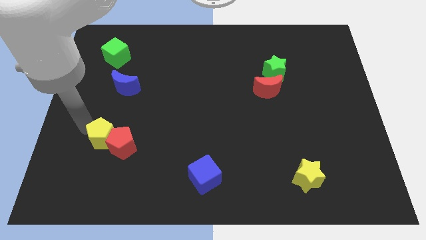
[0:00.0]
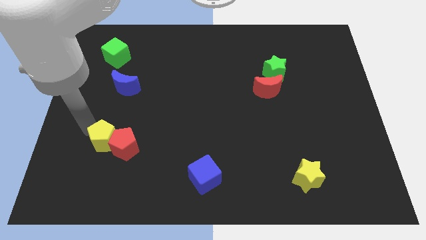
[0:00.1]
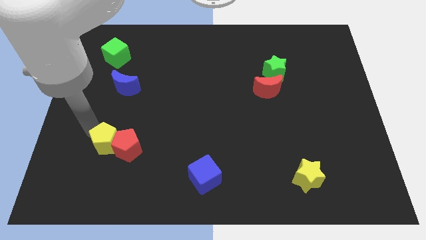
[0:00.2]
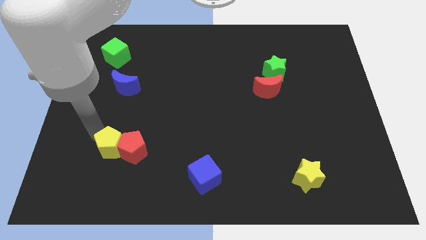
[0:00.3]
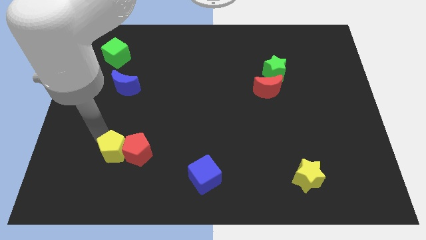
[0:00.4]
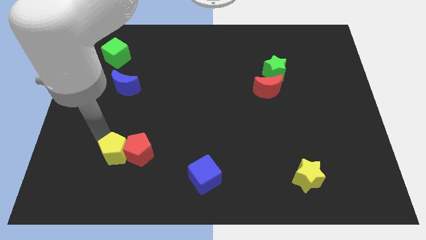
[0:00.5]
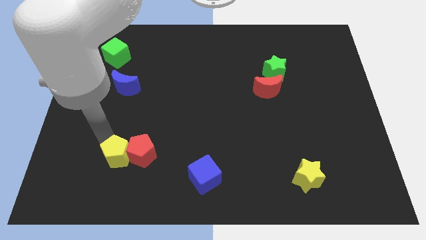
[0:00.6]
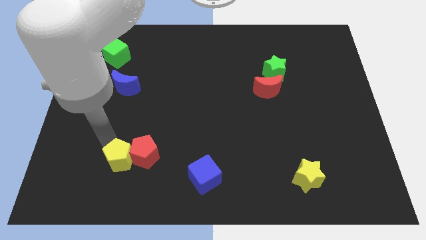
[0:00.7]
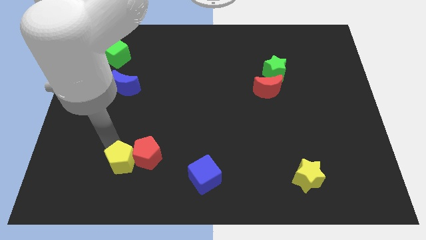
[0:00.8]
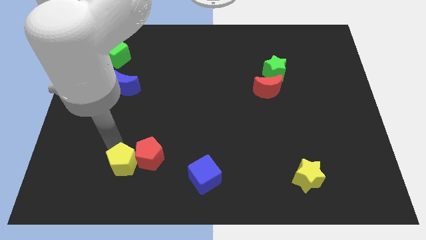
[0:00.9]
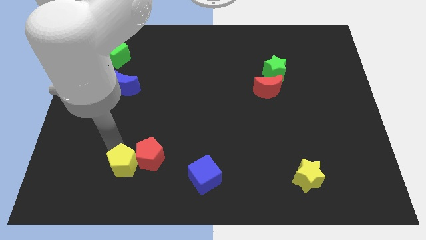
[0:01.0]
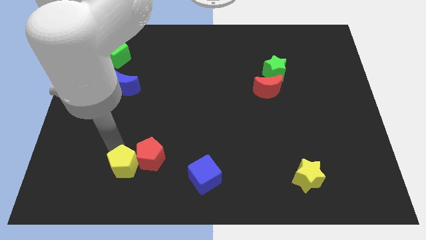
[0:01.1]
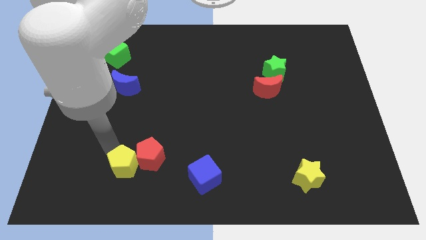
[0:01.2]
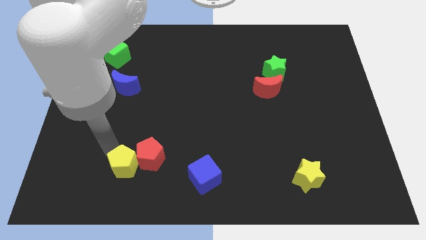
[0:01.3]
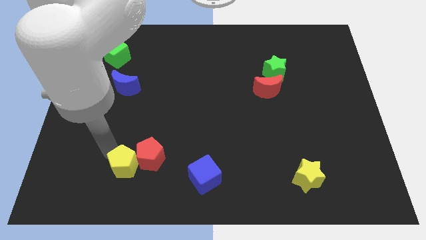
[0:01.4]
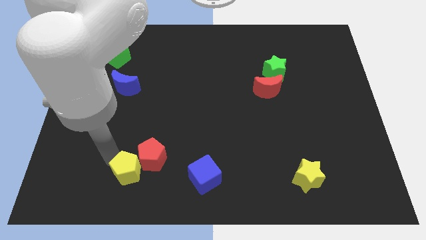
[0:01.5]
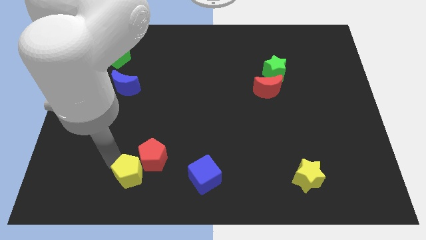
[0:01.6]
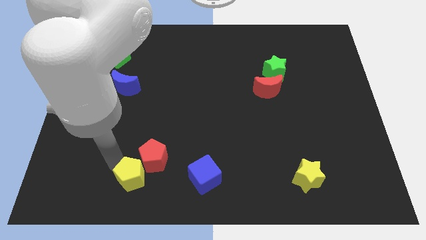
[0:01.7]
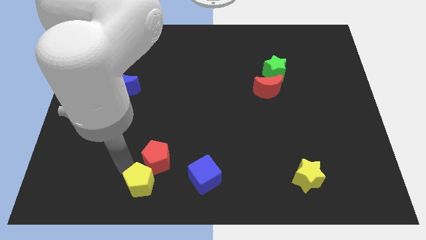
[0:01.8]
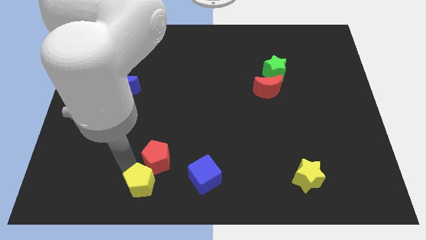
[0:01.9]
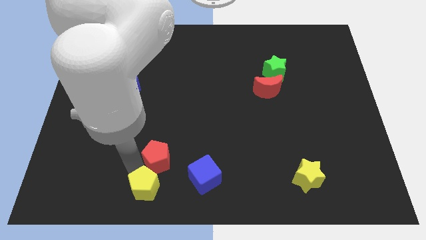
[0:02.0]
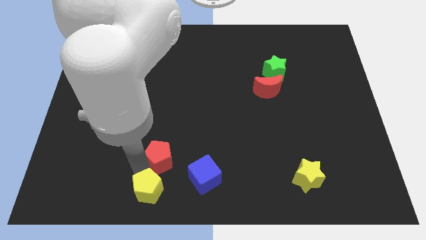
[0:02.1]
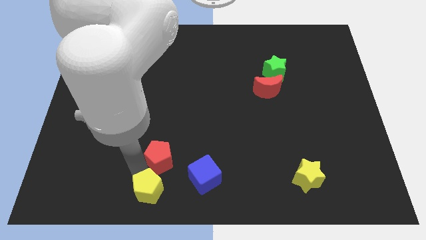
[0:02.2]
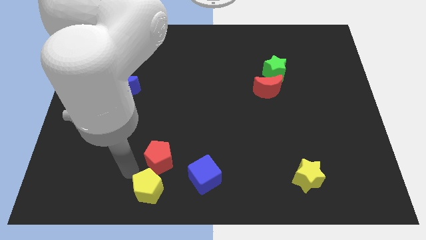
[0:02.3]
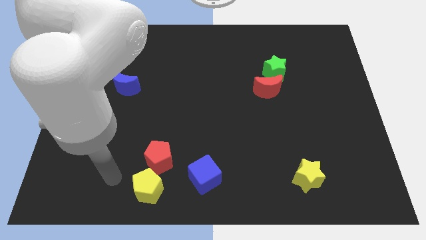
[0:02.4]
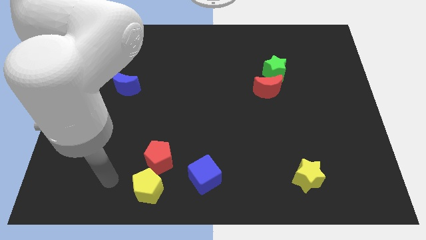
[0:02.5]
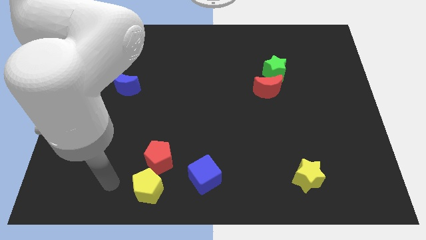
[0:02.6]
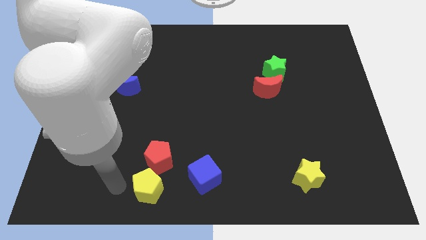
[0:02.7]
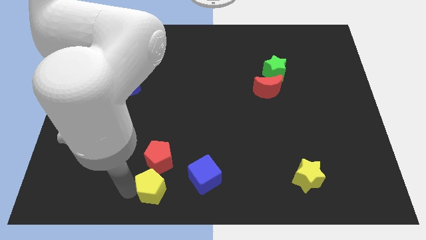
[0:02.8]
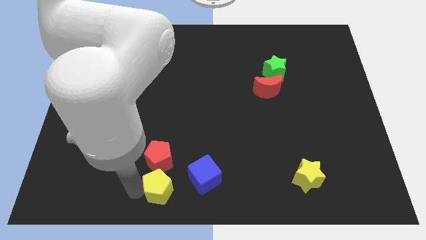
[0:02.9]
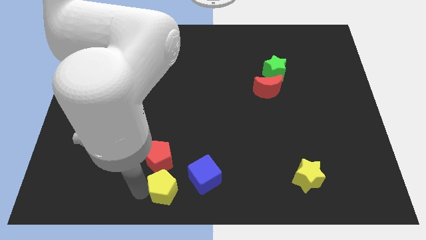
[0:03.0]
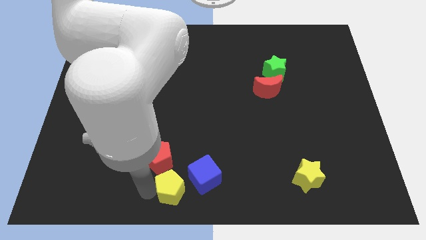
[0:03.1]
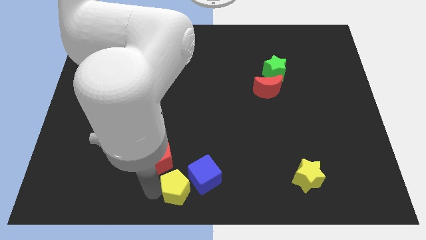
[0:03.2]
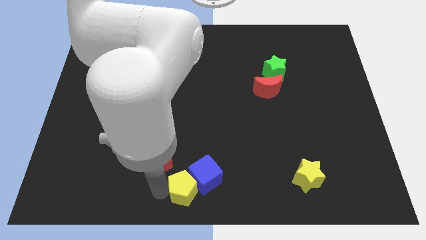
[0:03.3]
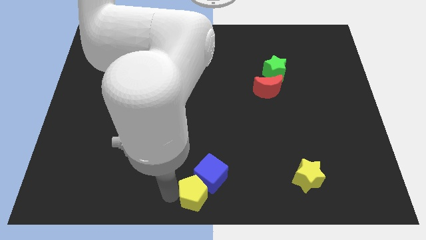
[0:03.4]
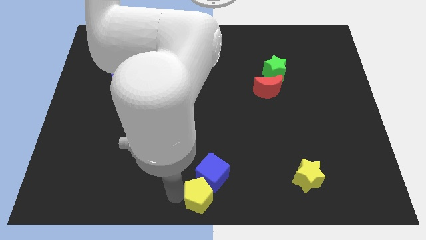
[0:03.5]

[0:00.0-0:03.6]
place yellow pentagon below blue cube

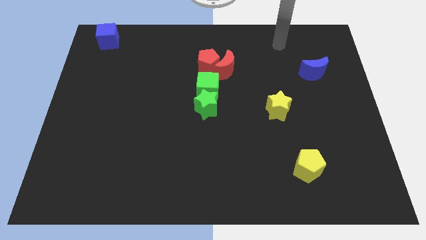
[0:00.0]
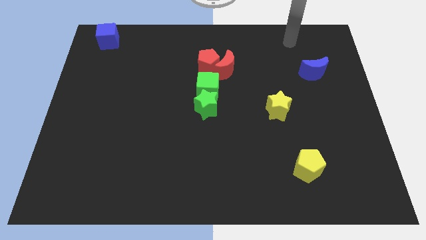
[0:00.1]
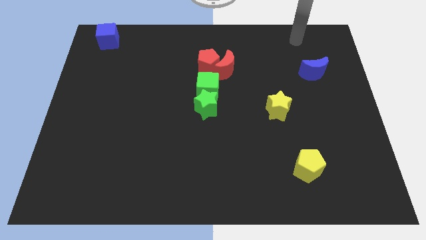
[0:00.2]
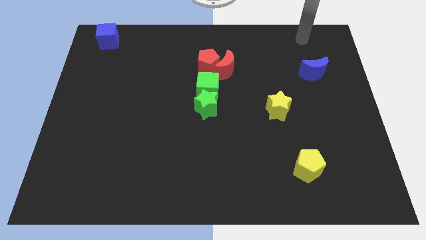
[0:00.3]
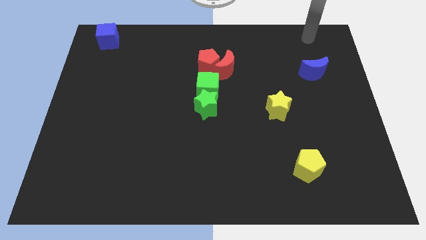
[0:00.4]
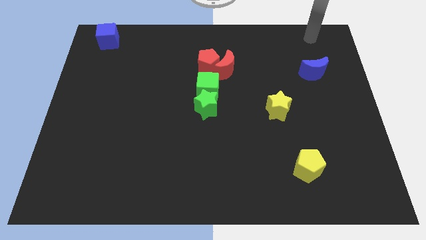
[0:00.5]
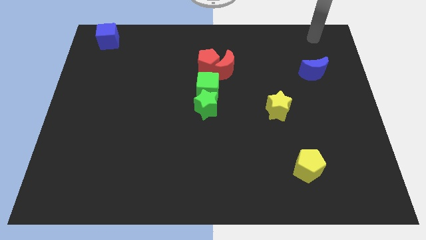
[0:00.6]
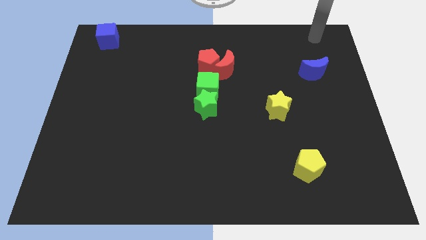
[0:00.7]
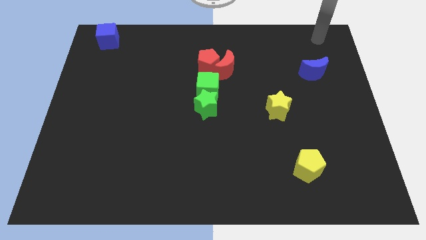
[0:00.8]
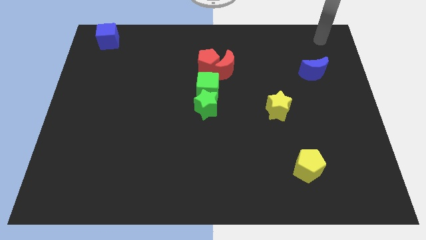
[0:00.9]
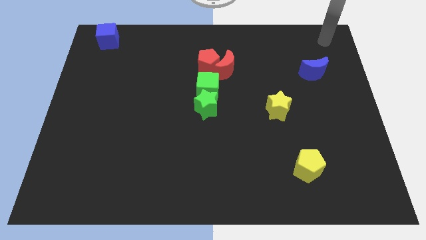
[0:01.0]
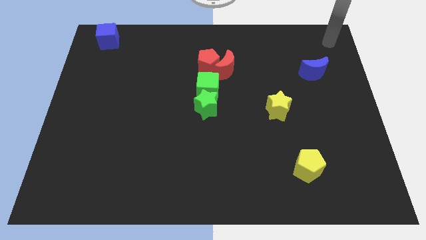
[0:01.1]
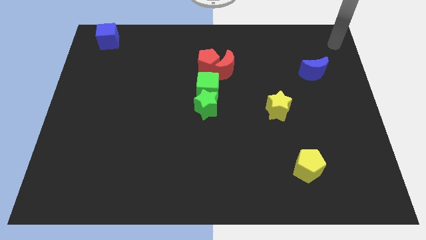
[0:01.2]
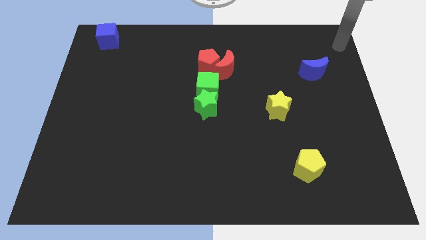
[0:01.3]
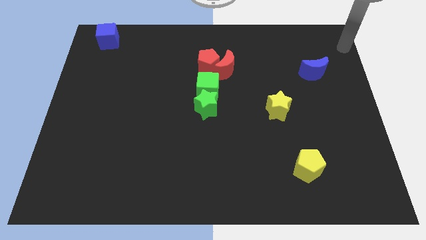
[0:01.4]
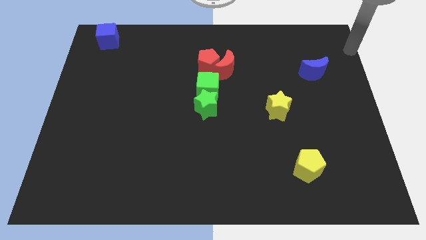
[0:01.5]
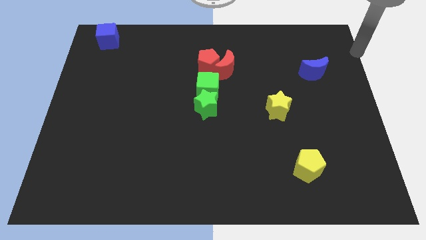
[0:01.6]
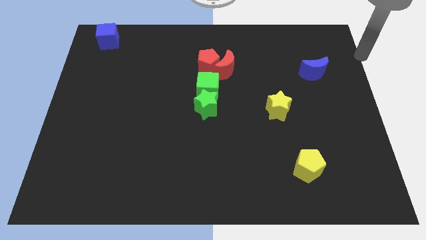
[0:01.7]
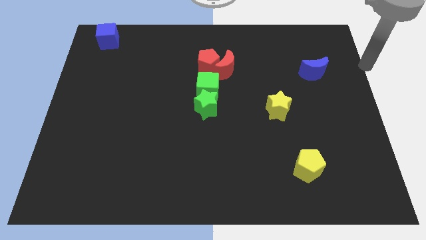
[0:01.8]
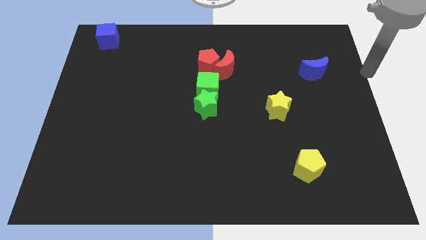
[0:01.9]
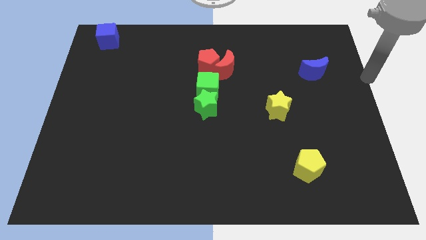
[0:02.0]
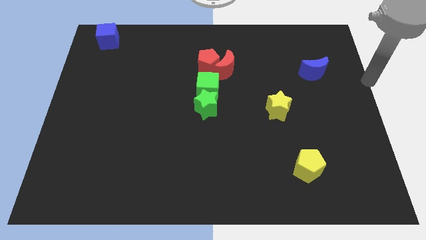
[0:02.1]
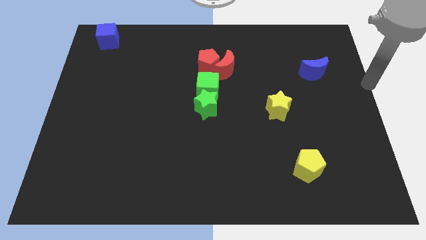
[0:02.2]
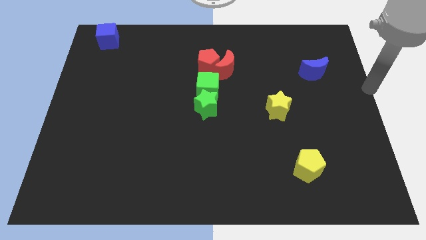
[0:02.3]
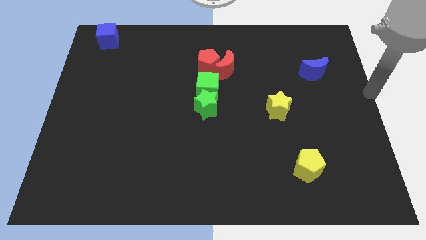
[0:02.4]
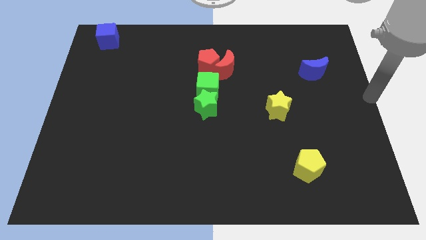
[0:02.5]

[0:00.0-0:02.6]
put your hand at the center right of the board

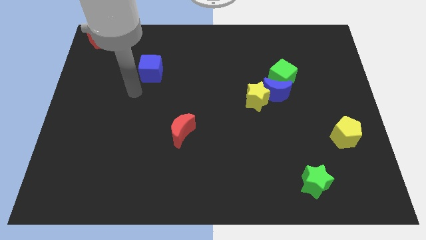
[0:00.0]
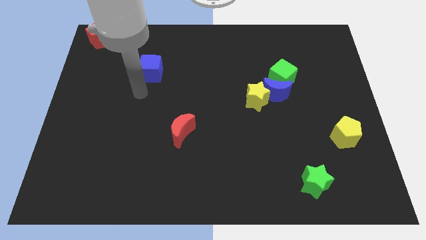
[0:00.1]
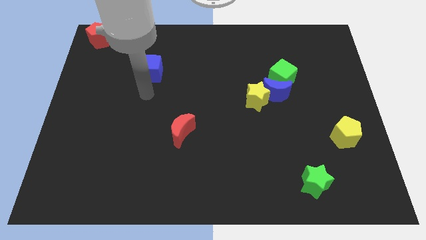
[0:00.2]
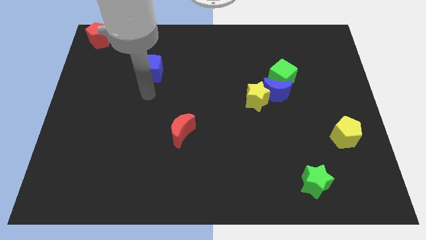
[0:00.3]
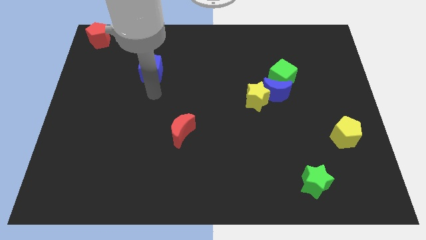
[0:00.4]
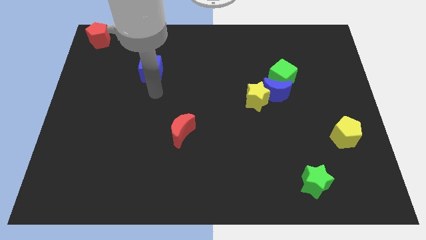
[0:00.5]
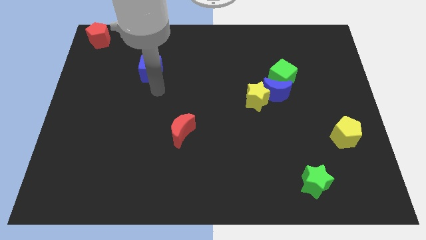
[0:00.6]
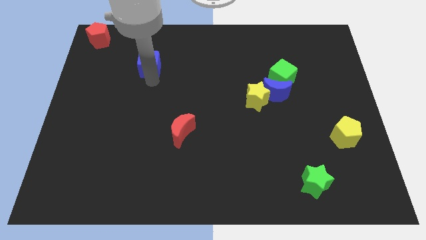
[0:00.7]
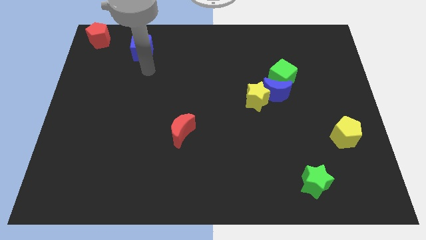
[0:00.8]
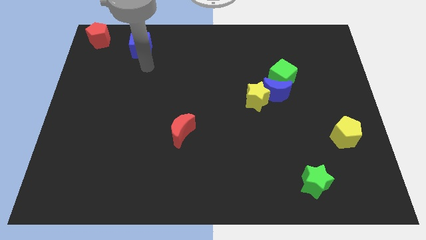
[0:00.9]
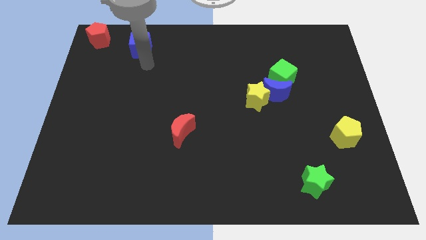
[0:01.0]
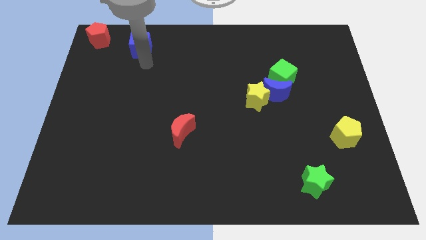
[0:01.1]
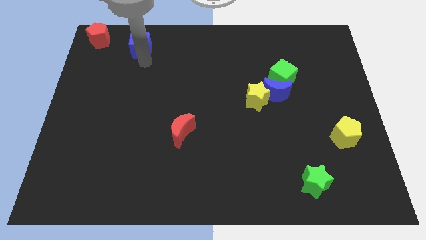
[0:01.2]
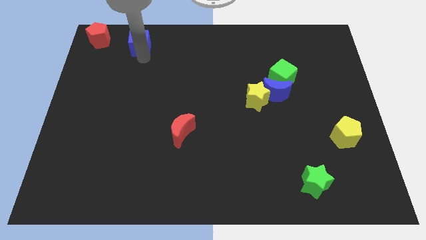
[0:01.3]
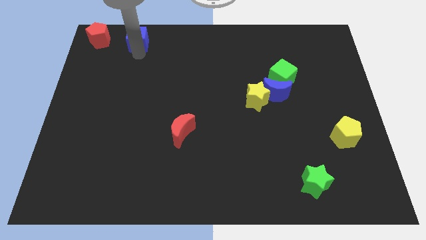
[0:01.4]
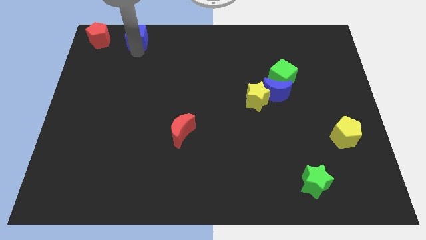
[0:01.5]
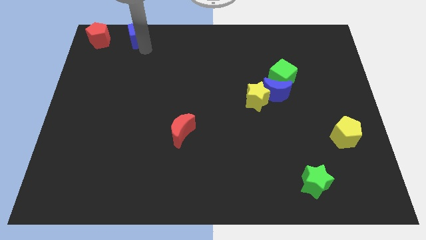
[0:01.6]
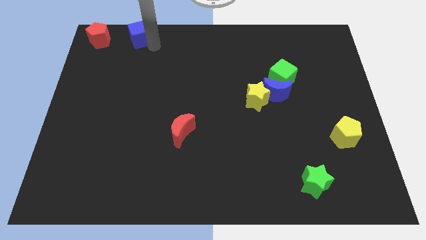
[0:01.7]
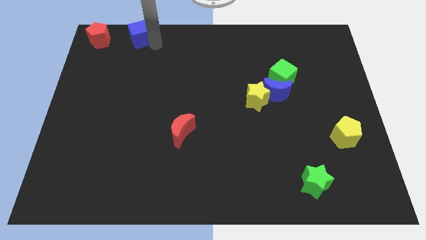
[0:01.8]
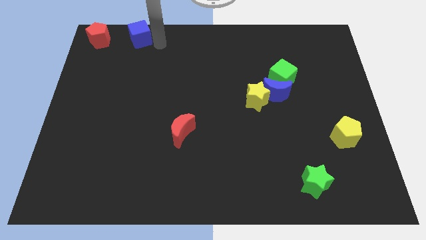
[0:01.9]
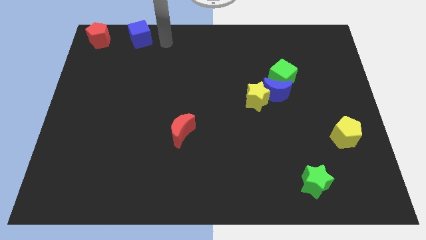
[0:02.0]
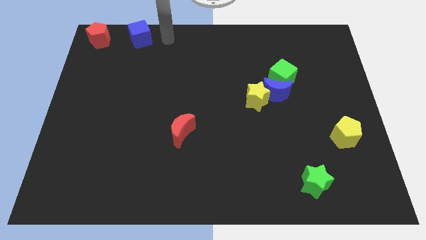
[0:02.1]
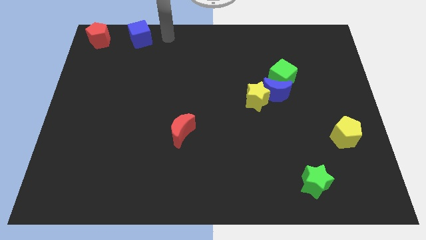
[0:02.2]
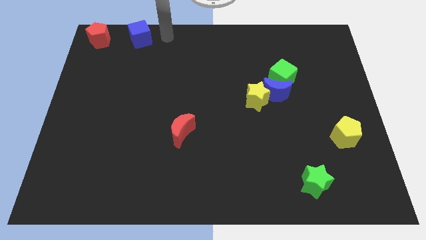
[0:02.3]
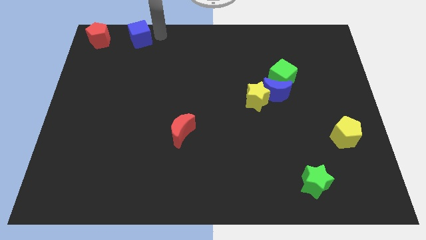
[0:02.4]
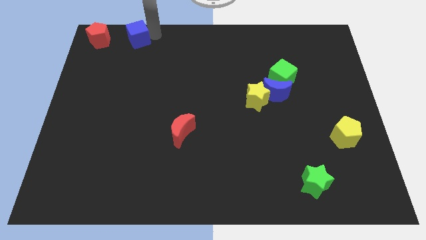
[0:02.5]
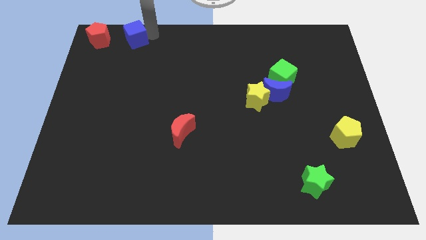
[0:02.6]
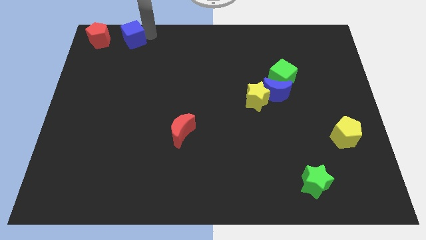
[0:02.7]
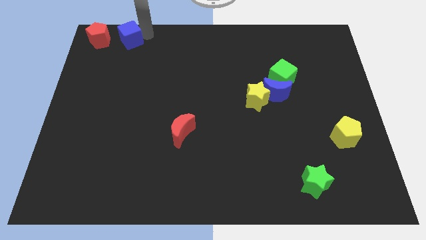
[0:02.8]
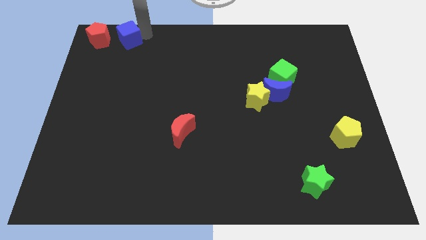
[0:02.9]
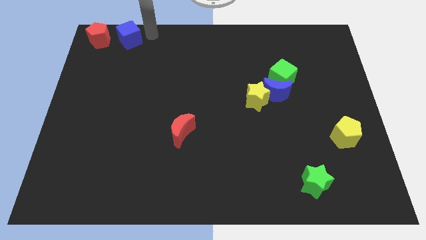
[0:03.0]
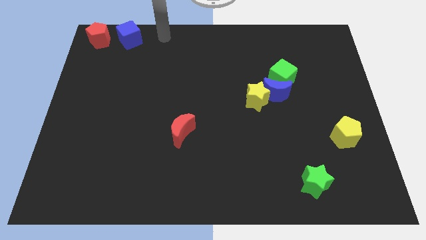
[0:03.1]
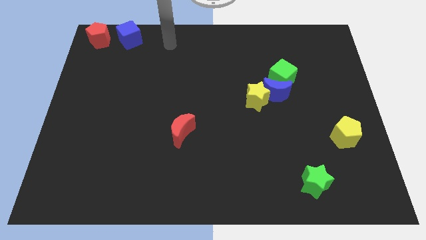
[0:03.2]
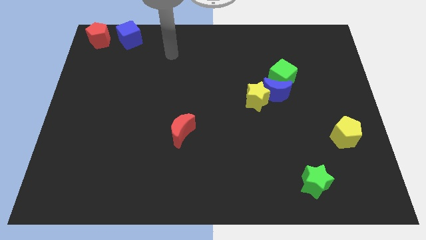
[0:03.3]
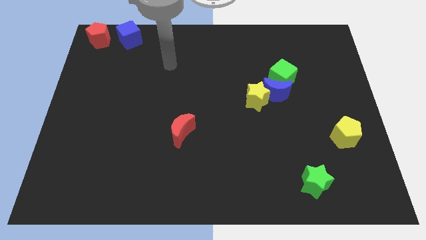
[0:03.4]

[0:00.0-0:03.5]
place blue cube near red pentagon
